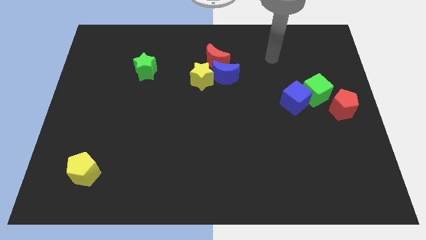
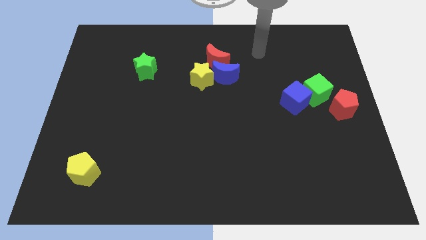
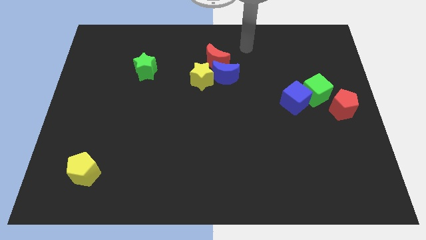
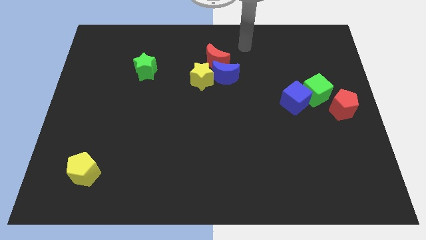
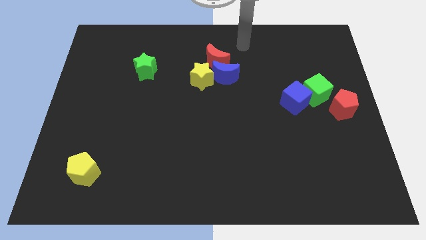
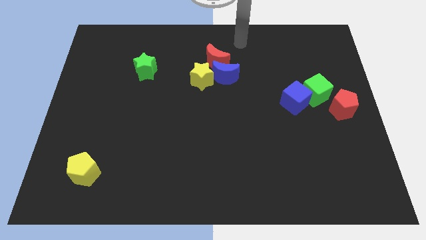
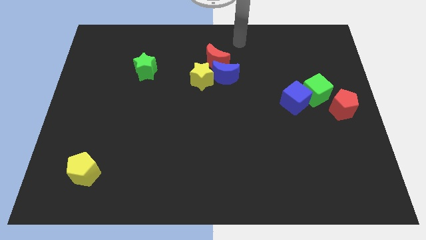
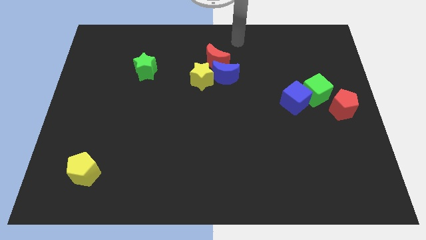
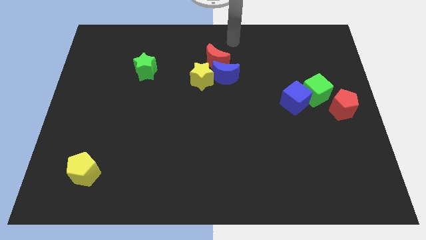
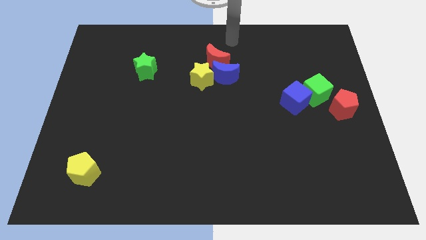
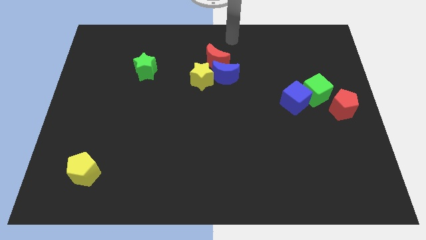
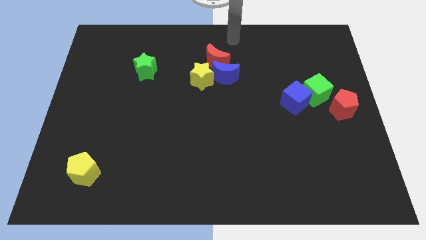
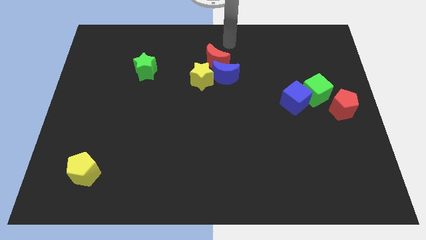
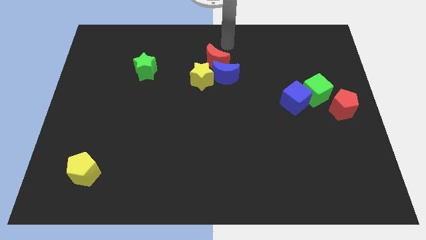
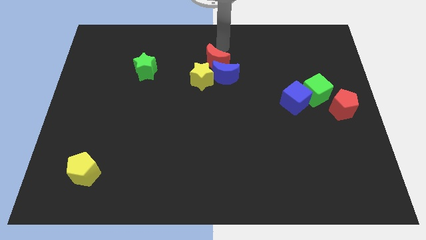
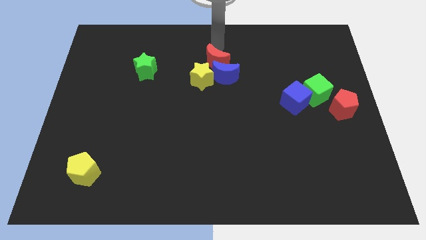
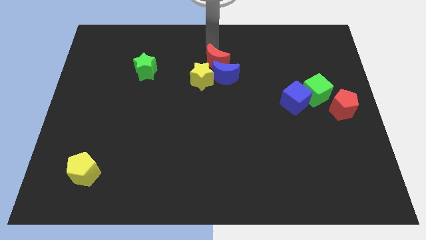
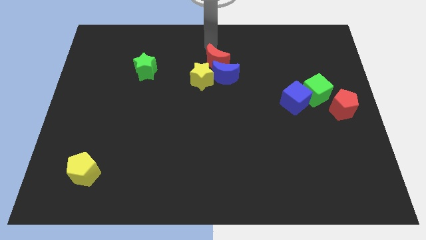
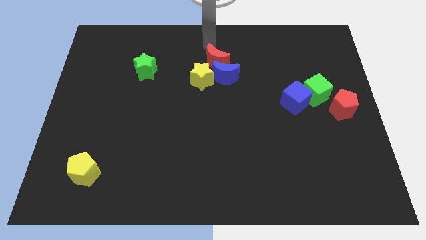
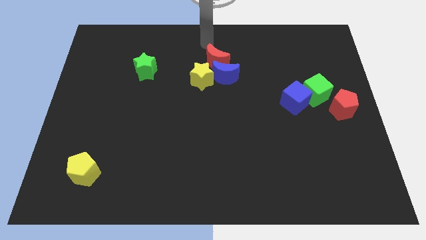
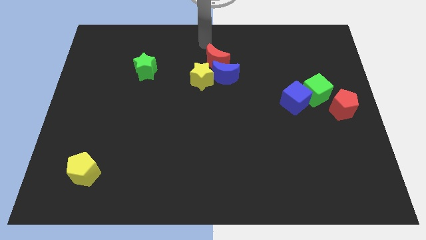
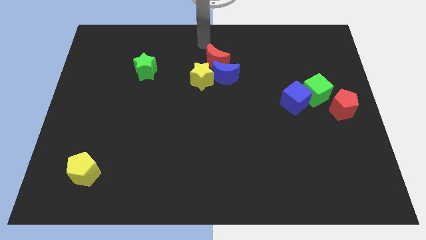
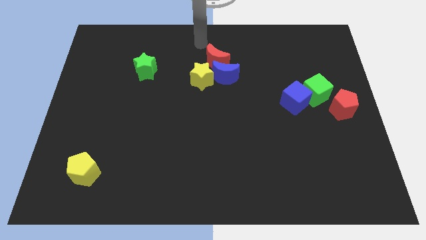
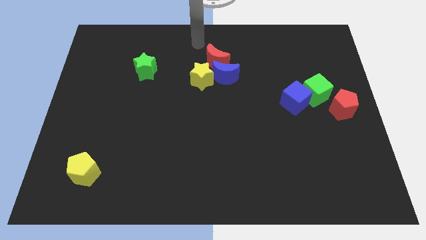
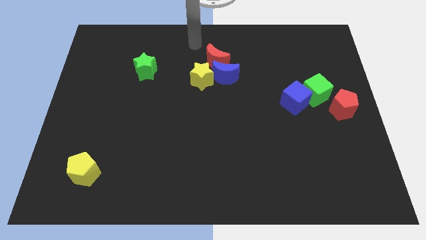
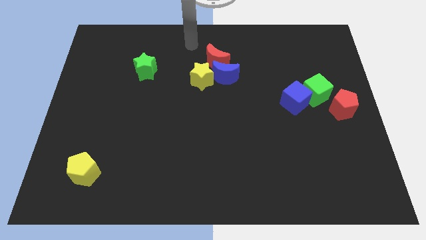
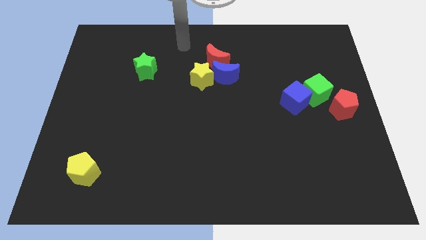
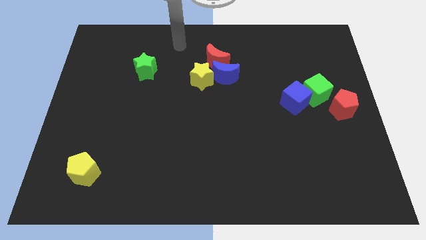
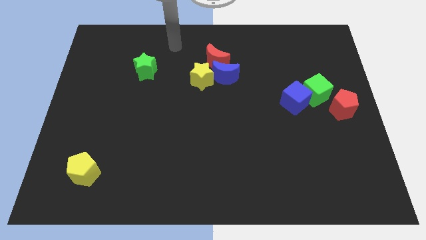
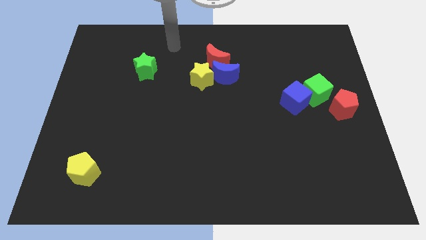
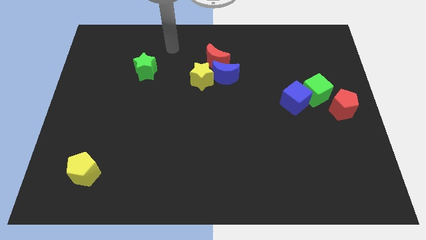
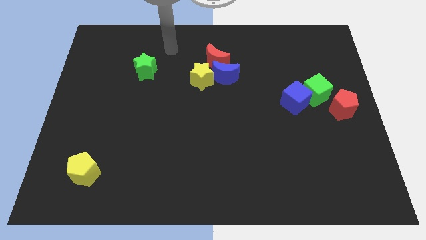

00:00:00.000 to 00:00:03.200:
put your hand diagonally top right to the green star

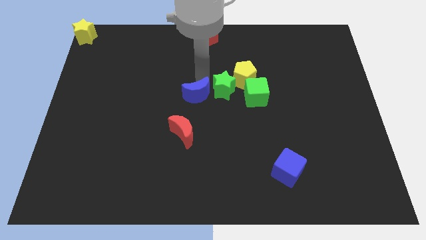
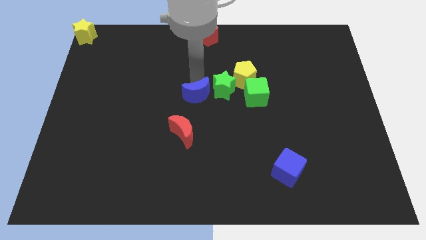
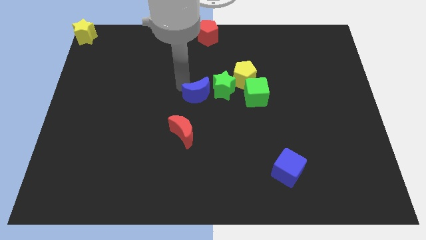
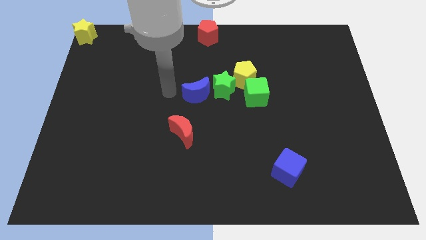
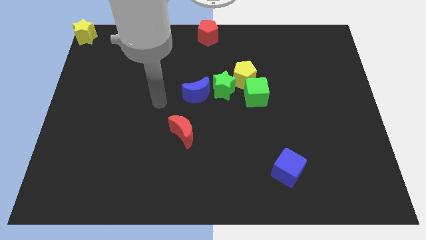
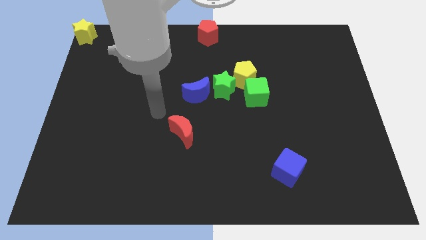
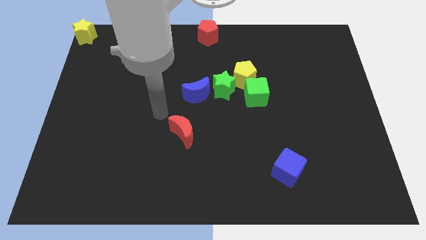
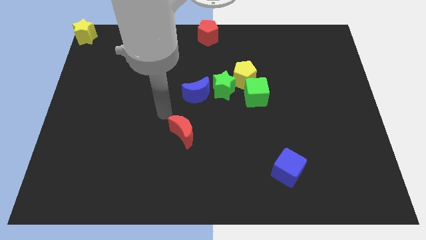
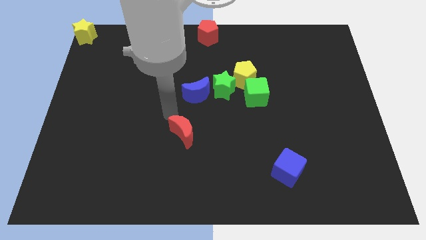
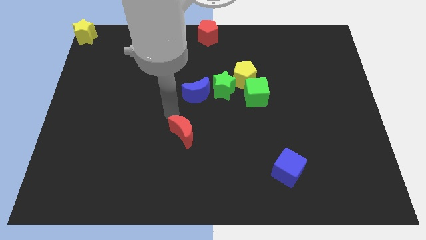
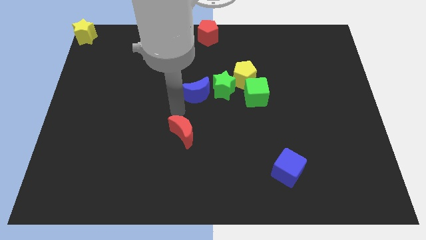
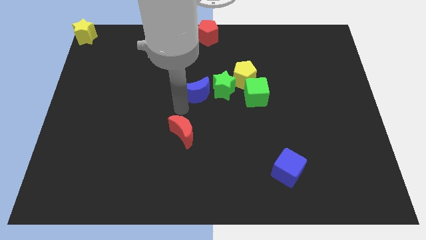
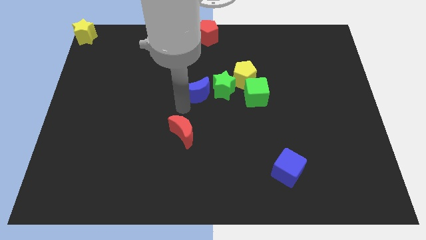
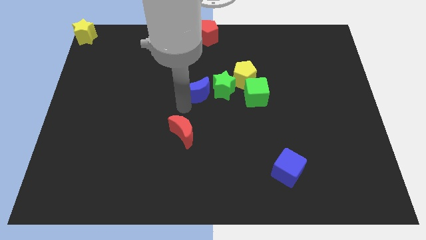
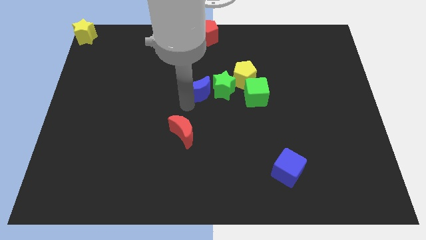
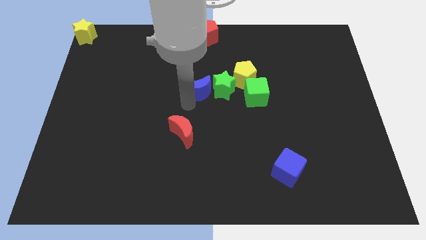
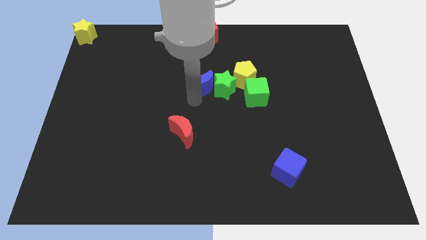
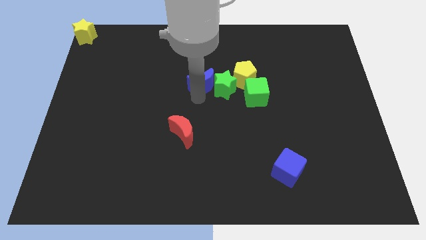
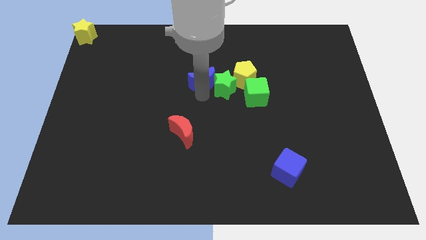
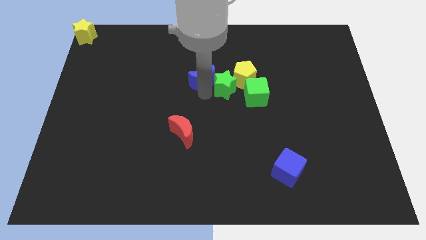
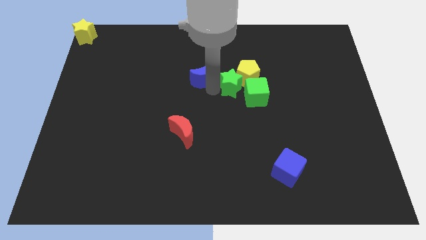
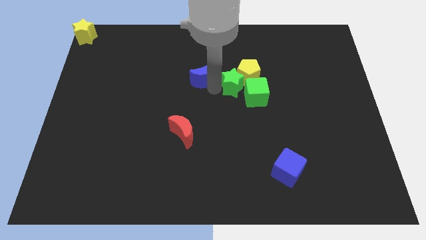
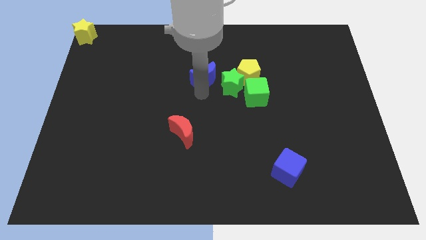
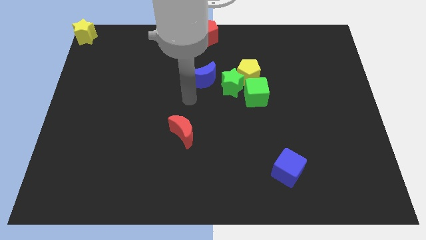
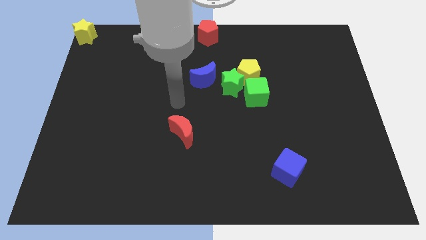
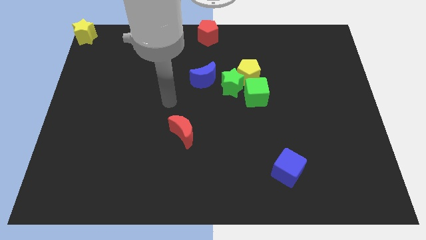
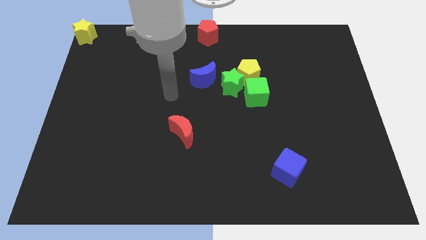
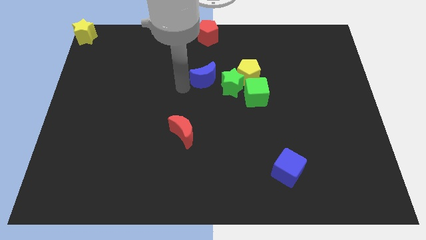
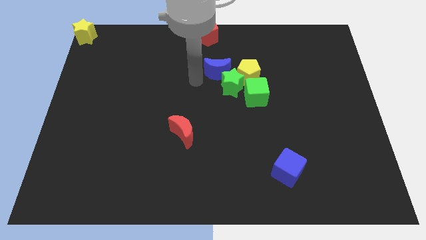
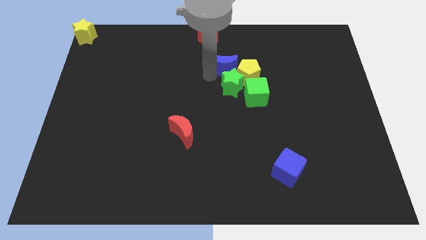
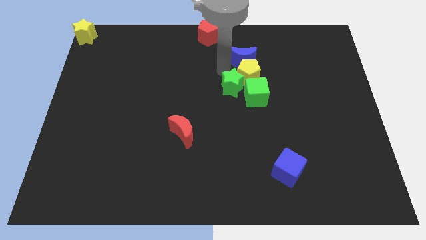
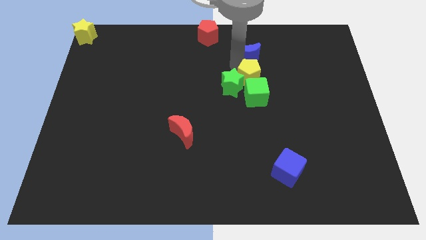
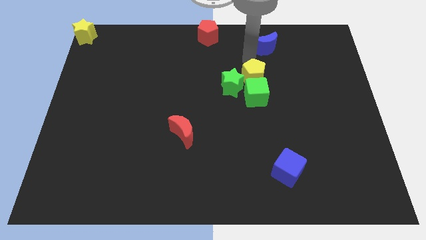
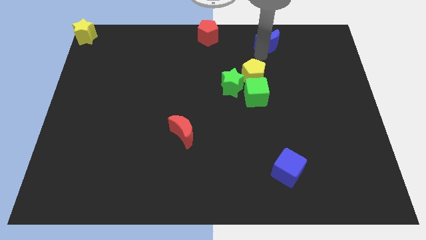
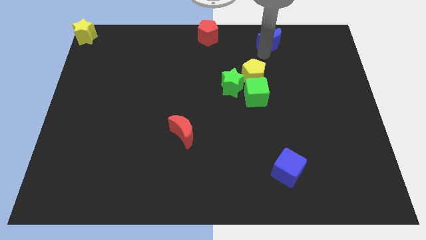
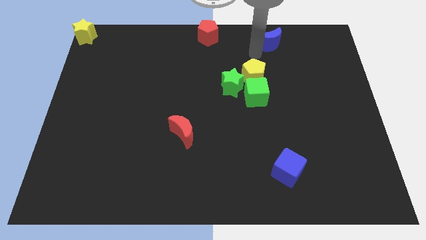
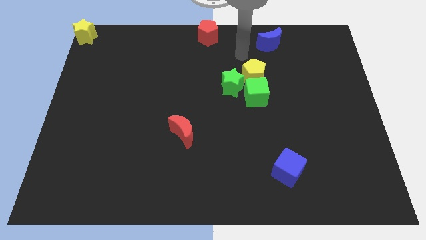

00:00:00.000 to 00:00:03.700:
slide the blue moon diagonally top right to the green star

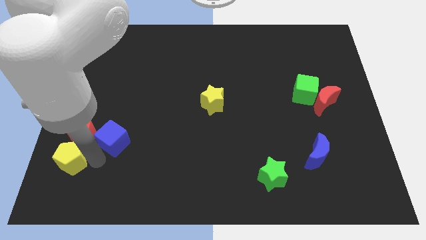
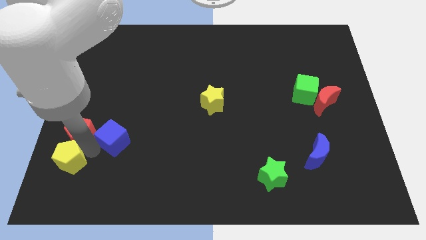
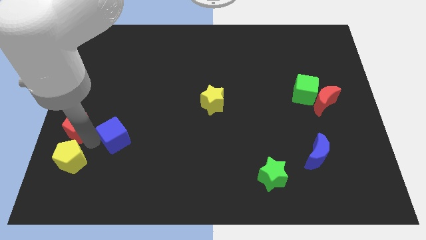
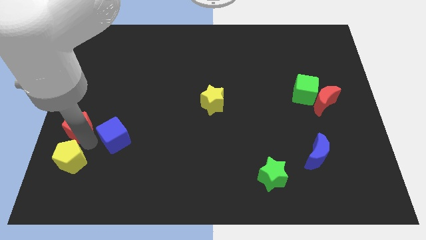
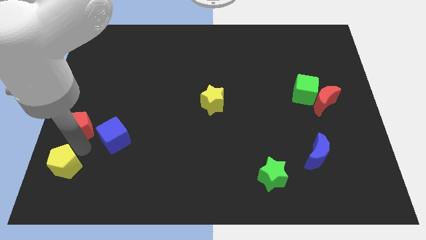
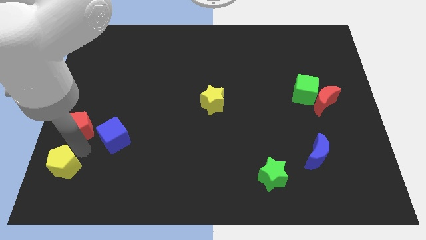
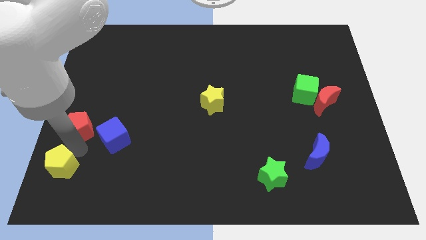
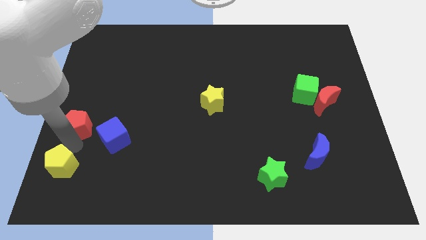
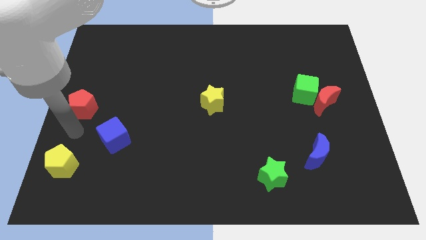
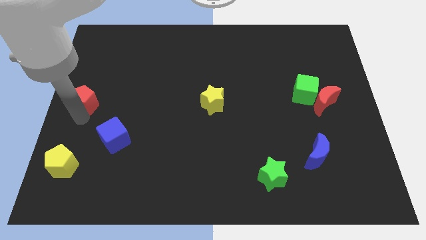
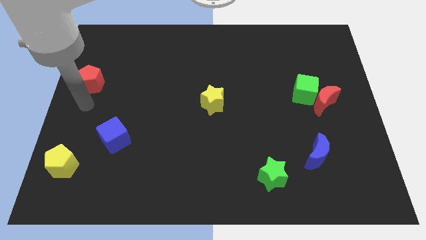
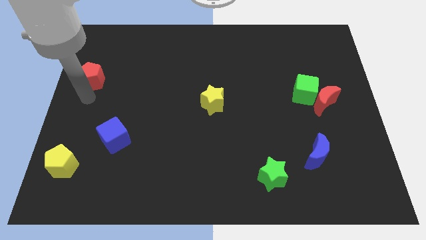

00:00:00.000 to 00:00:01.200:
push red pentagon slightly towards upwards

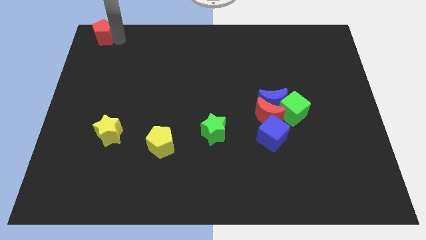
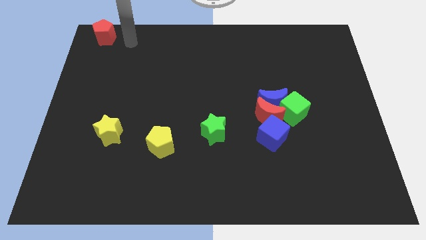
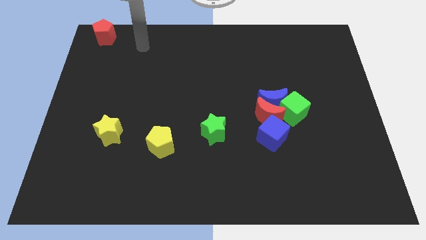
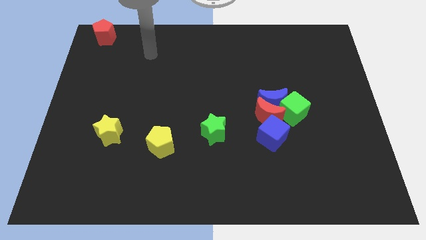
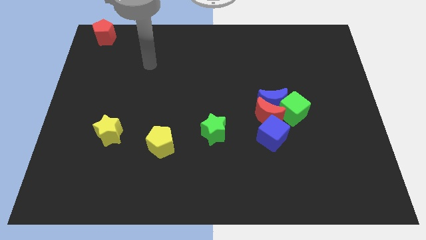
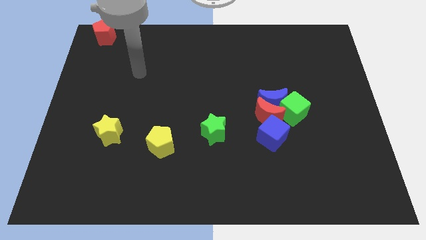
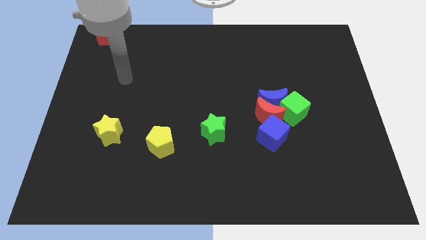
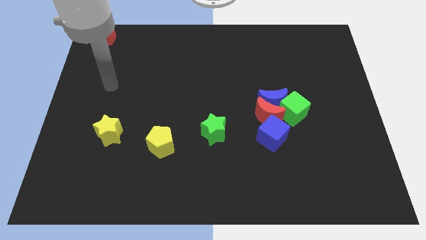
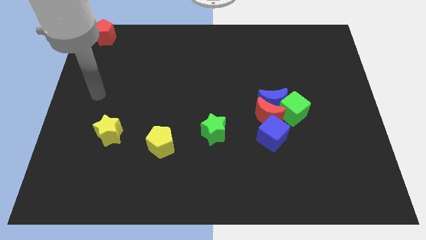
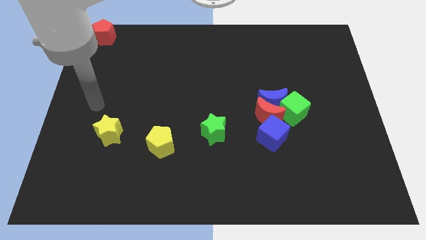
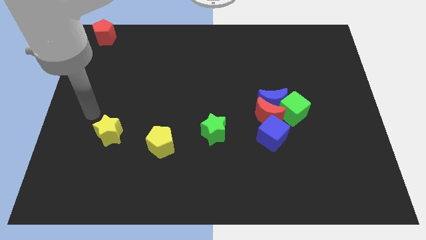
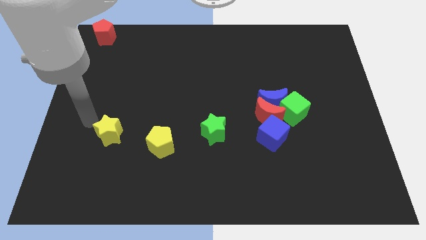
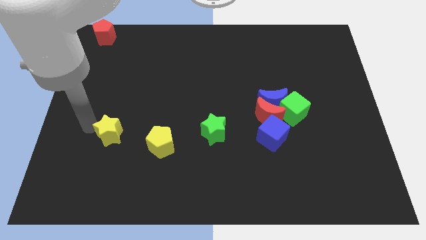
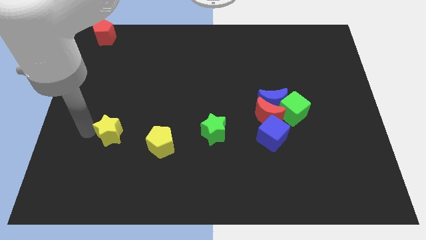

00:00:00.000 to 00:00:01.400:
move your arm towards the left side of the yellow star
